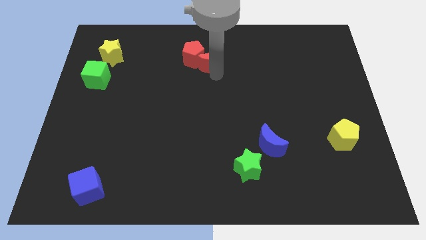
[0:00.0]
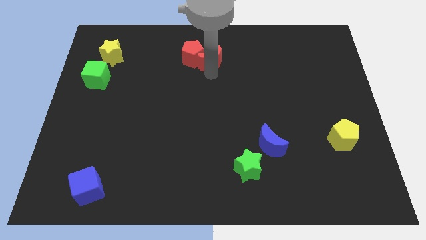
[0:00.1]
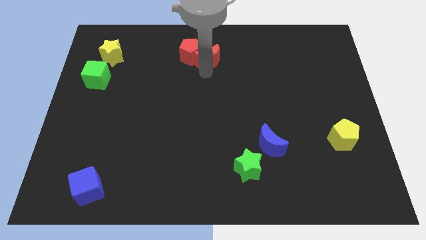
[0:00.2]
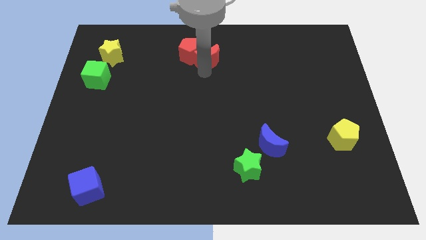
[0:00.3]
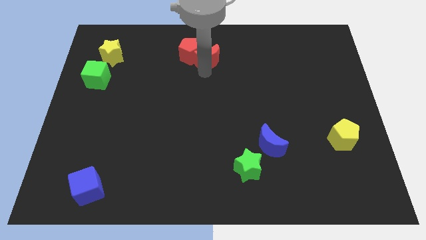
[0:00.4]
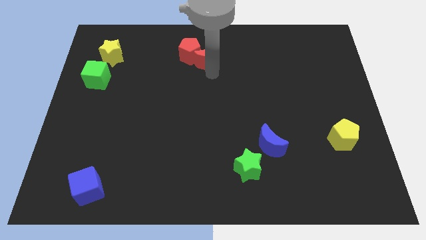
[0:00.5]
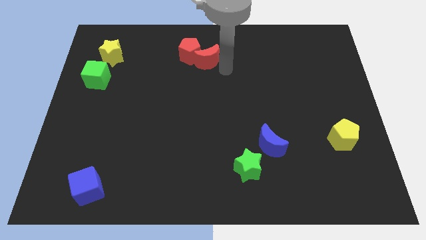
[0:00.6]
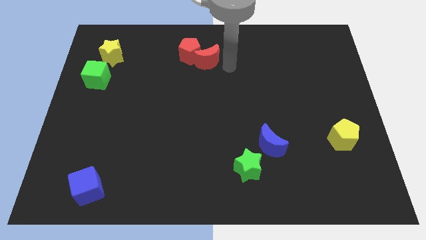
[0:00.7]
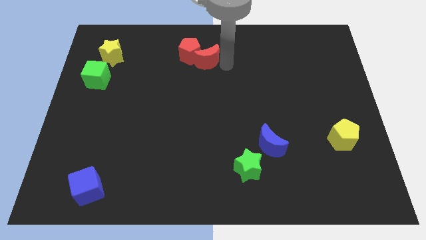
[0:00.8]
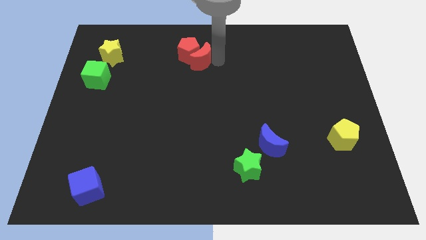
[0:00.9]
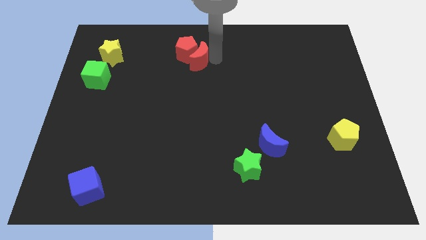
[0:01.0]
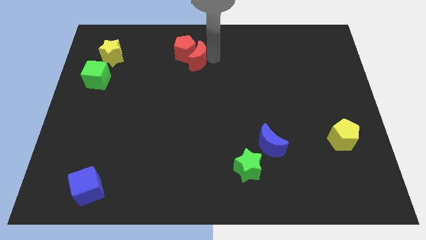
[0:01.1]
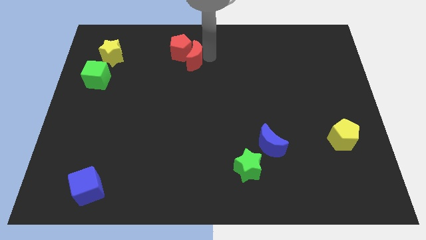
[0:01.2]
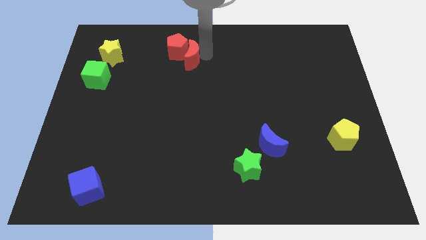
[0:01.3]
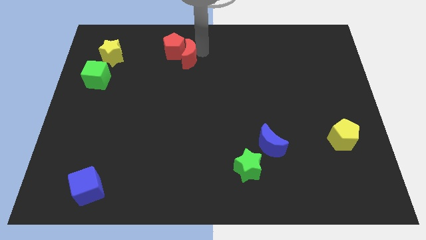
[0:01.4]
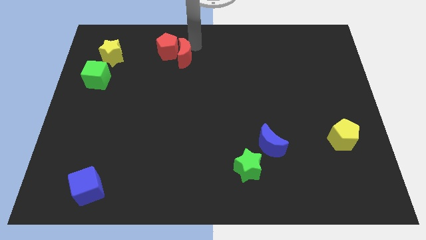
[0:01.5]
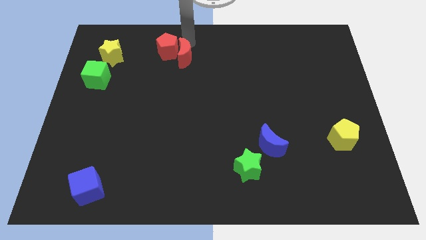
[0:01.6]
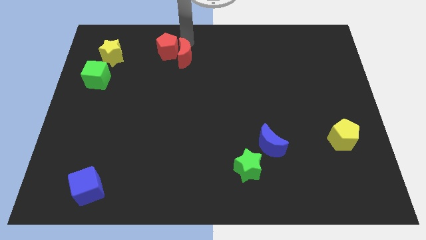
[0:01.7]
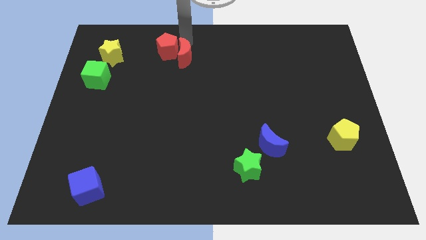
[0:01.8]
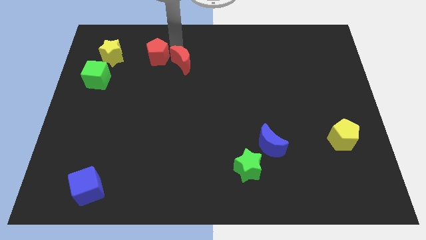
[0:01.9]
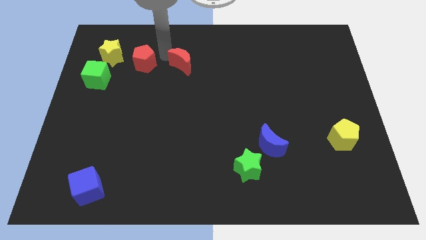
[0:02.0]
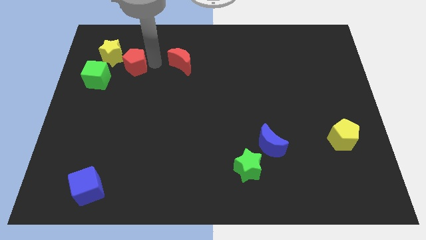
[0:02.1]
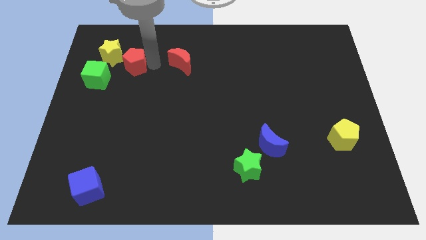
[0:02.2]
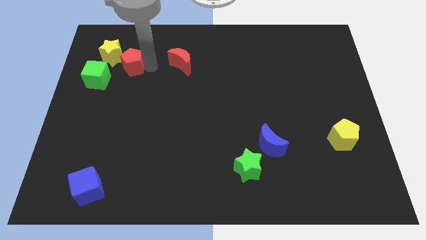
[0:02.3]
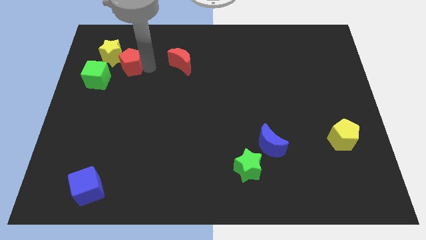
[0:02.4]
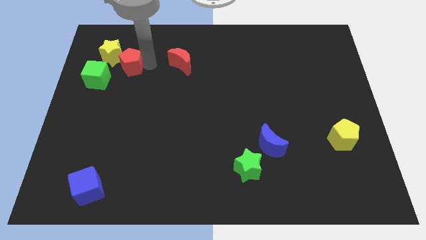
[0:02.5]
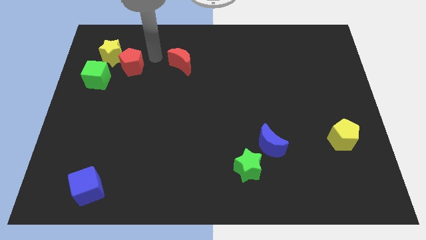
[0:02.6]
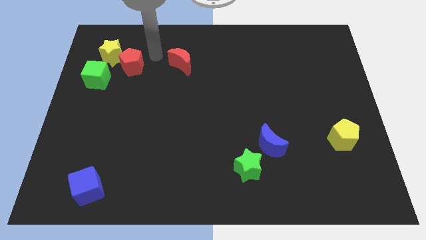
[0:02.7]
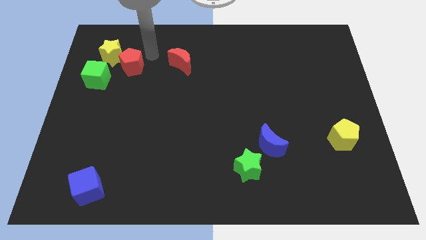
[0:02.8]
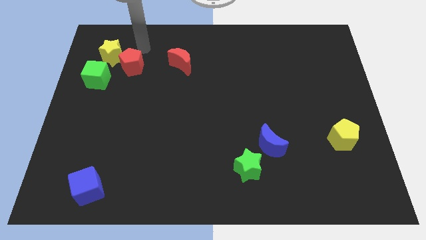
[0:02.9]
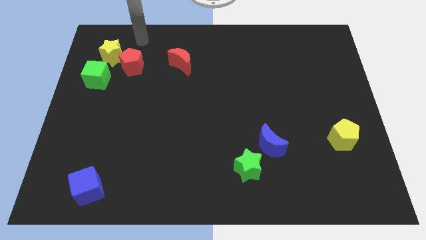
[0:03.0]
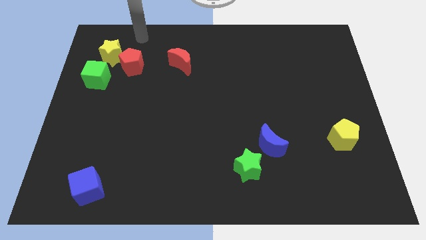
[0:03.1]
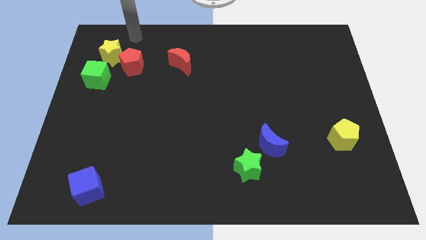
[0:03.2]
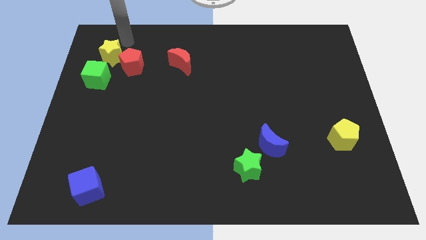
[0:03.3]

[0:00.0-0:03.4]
move the red pentagon closer to the yellow star

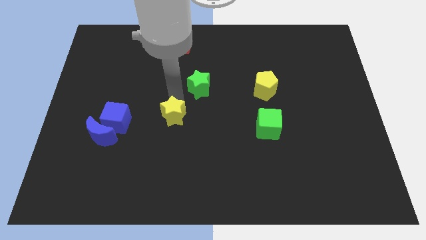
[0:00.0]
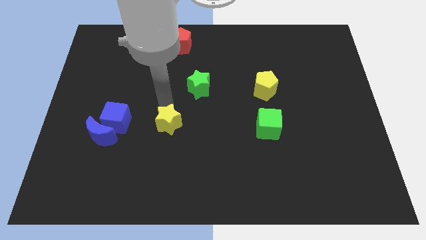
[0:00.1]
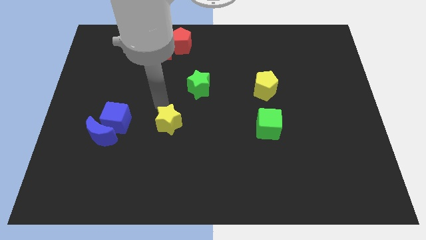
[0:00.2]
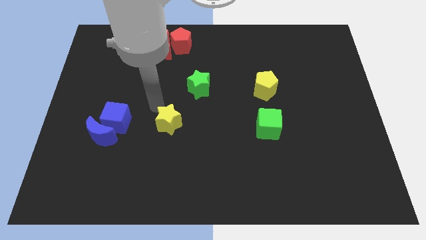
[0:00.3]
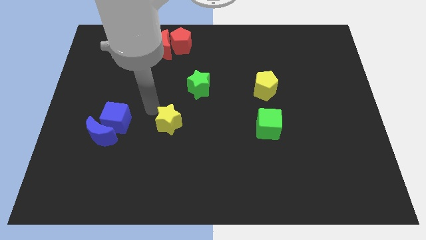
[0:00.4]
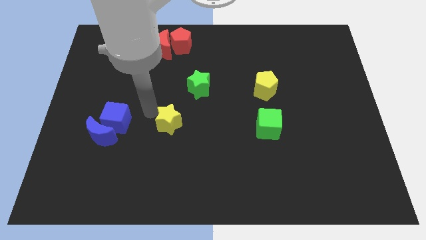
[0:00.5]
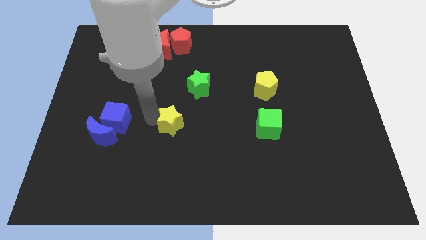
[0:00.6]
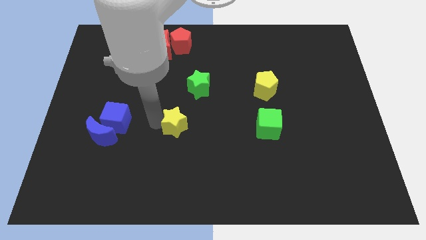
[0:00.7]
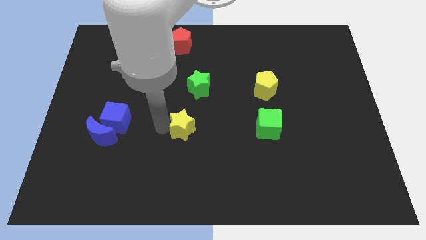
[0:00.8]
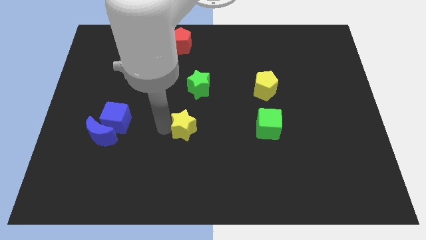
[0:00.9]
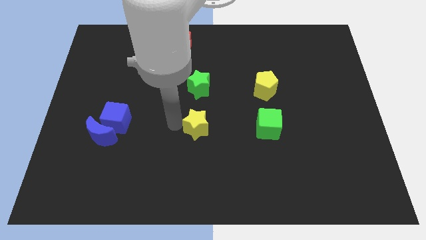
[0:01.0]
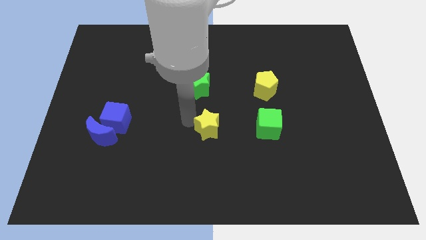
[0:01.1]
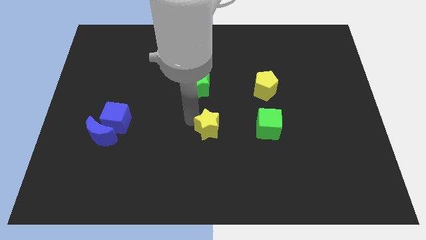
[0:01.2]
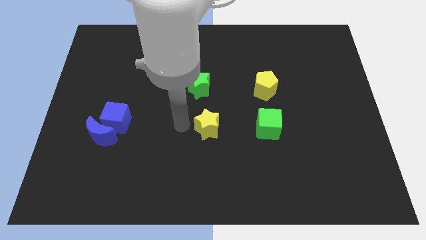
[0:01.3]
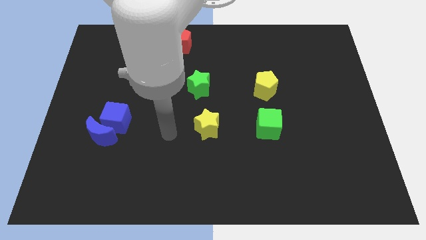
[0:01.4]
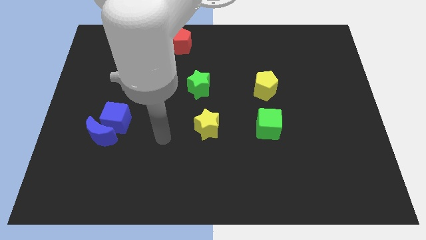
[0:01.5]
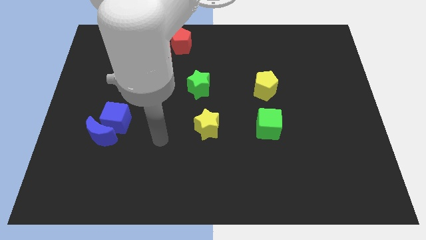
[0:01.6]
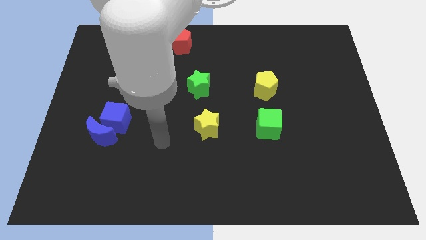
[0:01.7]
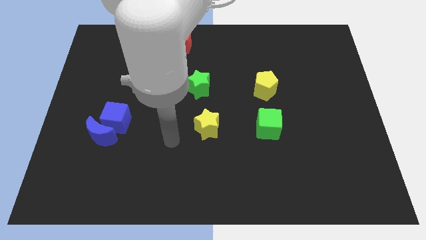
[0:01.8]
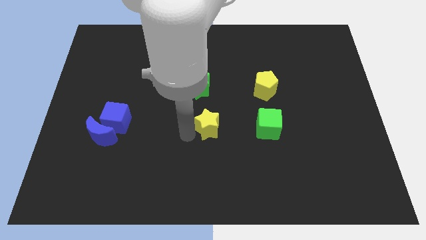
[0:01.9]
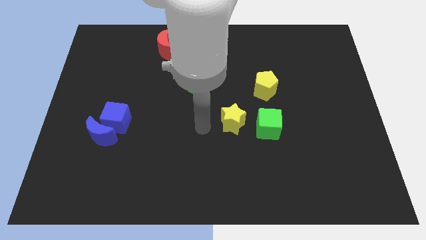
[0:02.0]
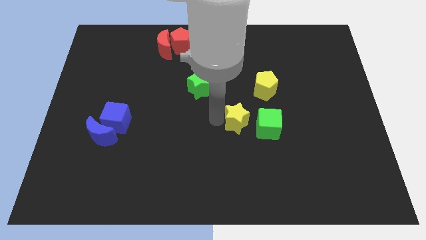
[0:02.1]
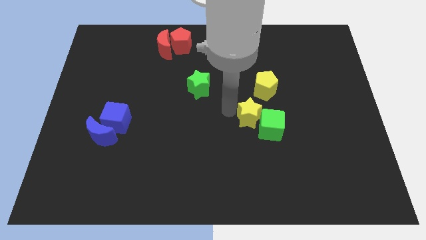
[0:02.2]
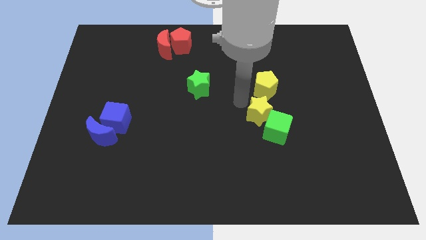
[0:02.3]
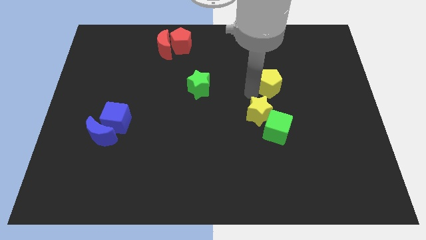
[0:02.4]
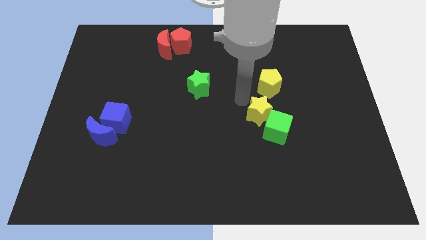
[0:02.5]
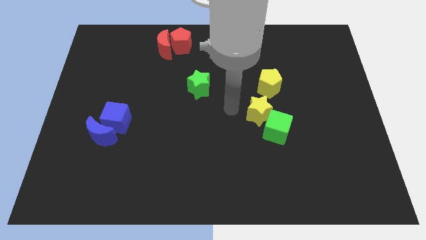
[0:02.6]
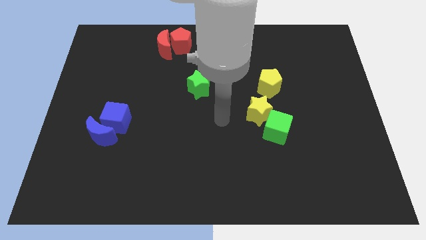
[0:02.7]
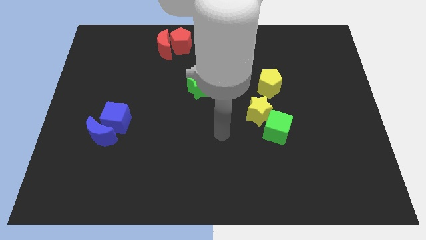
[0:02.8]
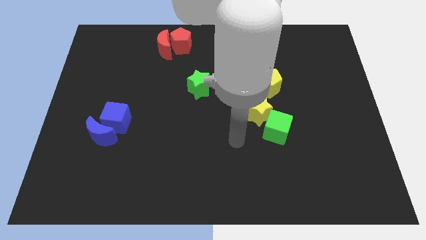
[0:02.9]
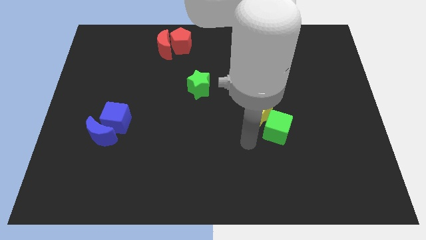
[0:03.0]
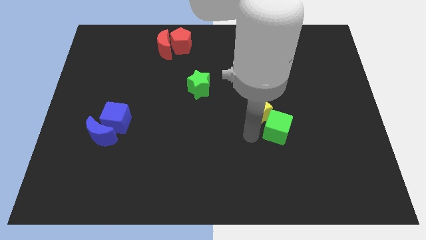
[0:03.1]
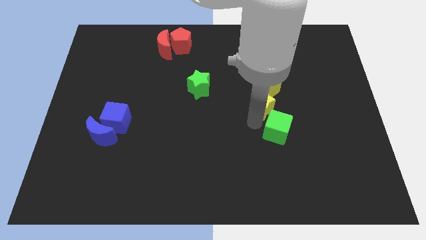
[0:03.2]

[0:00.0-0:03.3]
push the yellow star to the bottom of the yellow pentagon

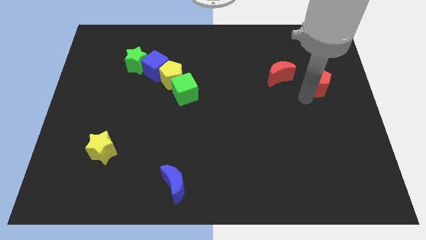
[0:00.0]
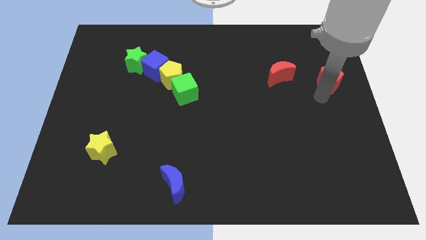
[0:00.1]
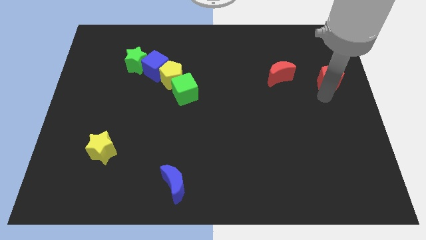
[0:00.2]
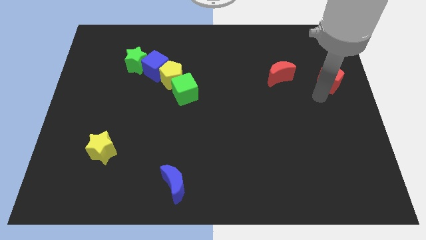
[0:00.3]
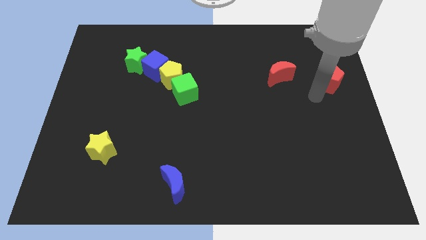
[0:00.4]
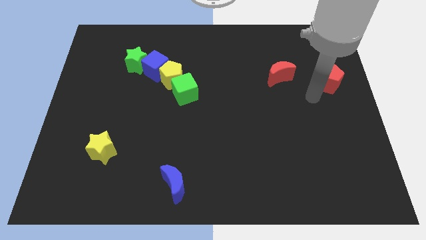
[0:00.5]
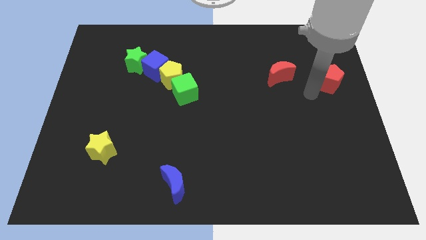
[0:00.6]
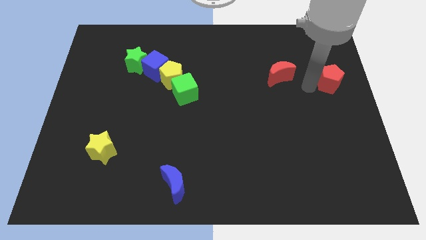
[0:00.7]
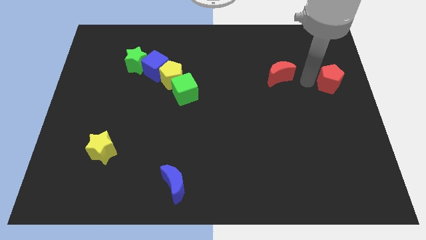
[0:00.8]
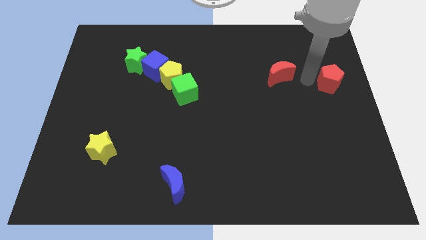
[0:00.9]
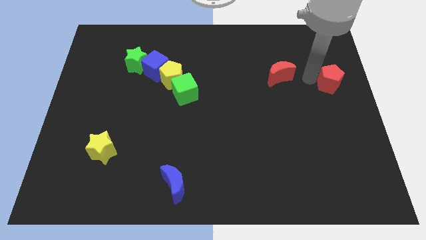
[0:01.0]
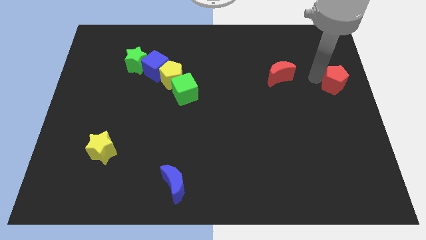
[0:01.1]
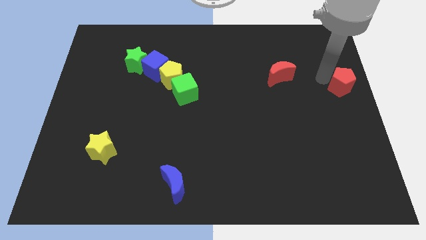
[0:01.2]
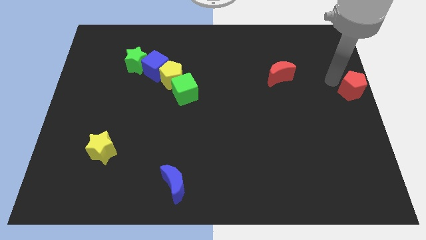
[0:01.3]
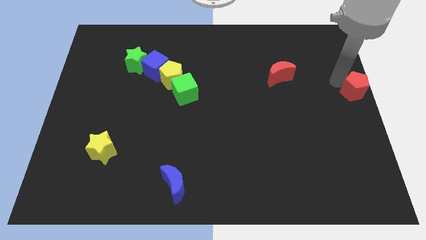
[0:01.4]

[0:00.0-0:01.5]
push the red pentagon to the right side of the board

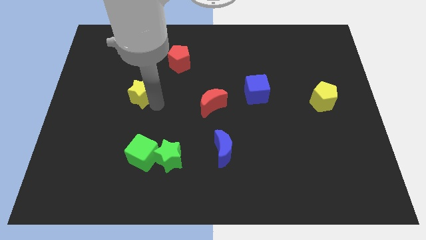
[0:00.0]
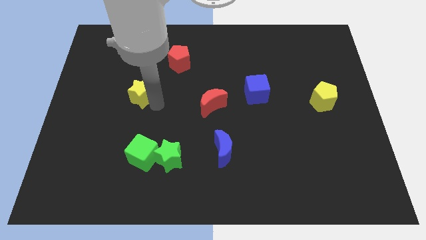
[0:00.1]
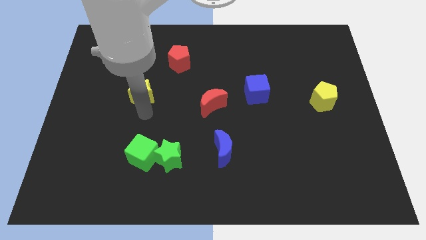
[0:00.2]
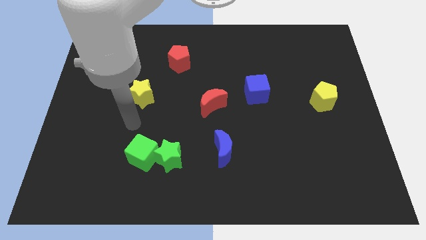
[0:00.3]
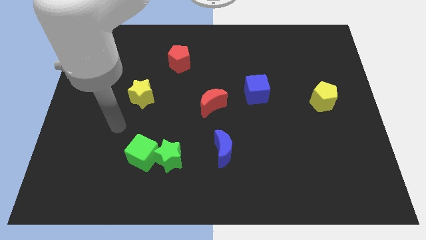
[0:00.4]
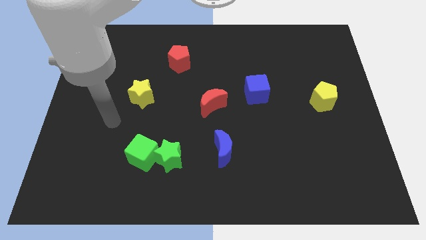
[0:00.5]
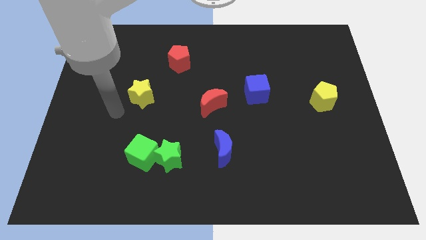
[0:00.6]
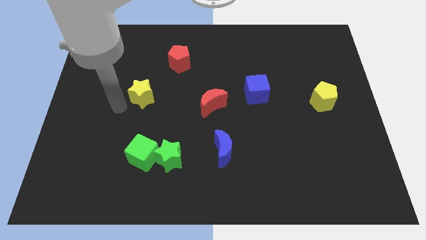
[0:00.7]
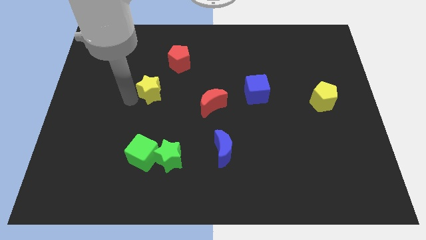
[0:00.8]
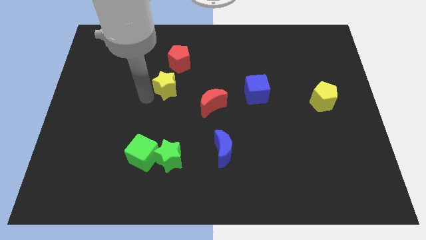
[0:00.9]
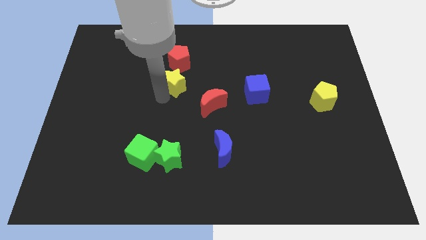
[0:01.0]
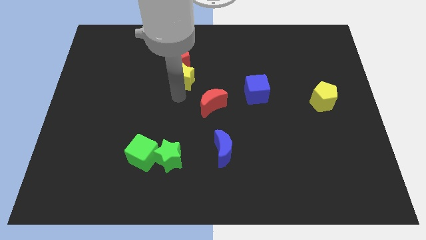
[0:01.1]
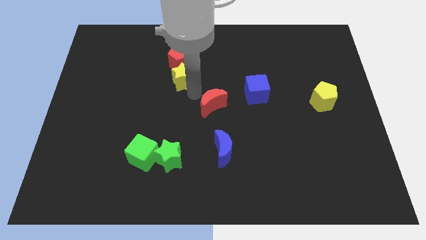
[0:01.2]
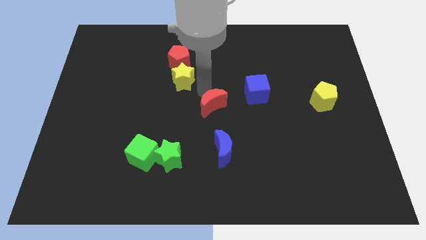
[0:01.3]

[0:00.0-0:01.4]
point your arm between yellow star and red moon
